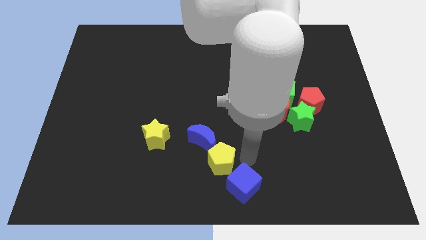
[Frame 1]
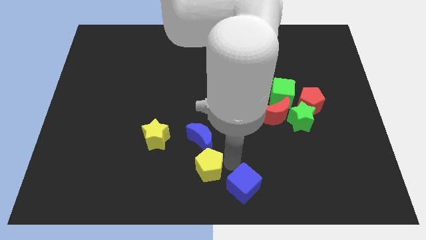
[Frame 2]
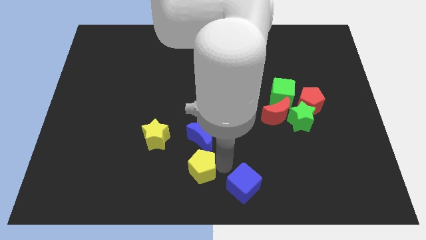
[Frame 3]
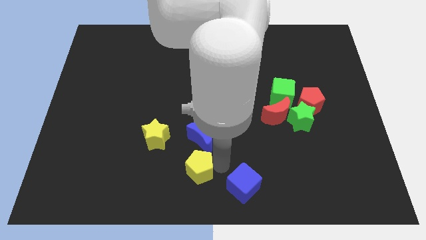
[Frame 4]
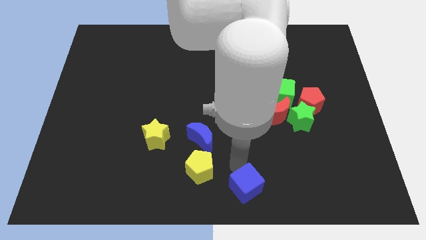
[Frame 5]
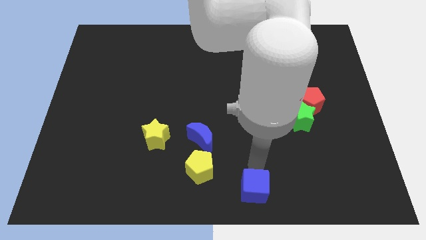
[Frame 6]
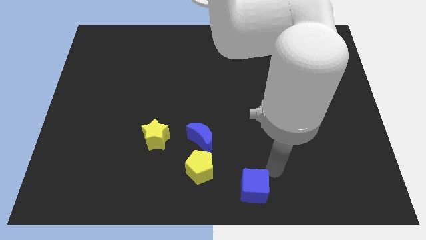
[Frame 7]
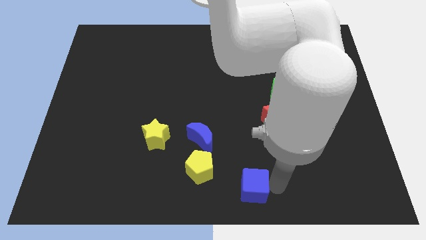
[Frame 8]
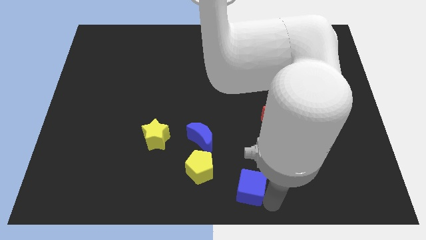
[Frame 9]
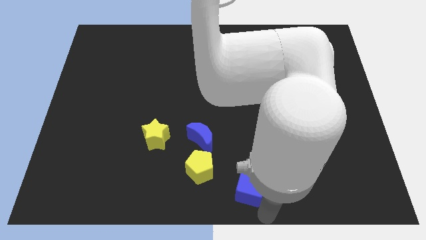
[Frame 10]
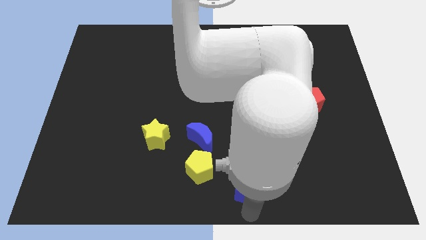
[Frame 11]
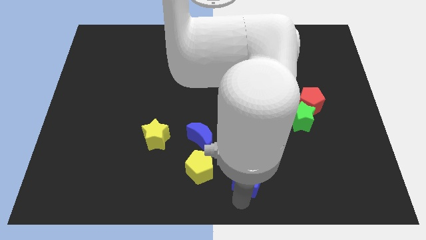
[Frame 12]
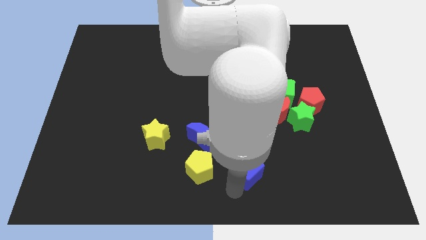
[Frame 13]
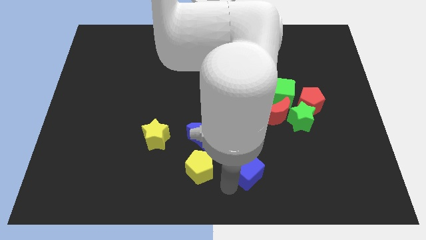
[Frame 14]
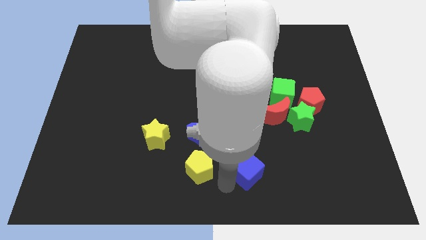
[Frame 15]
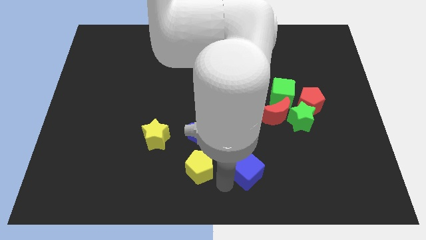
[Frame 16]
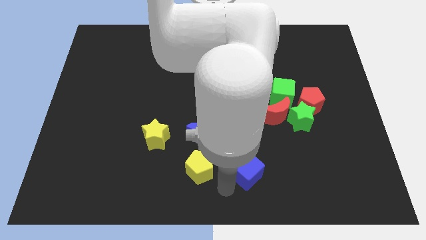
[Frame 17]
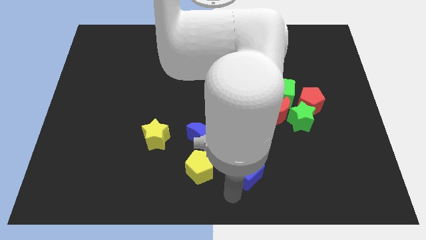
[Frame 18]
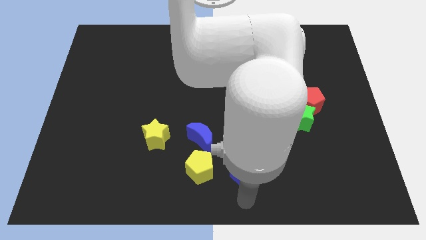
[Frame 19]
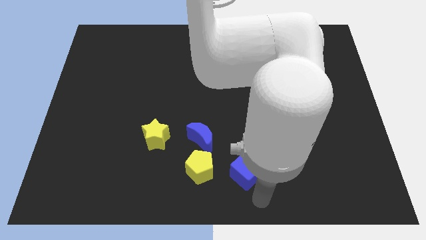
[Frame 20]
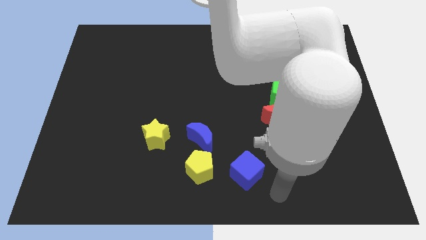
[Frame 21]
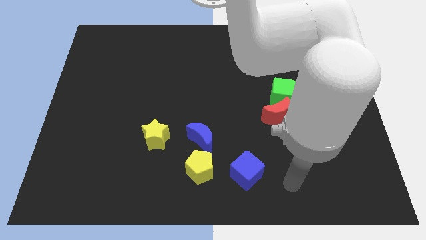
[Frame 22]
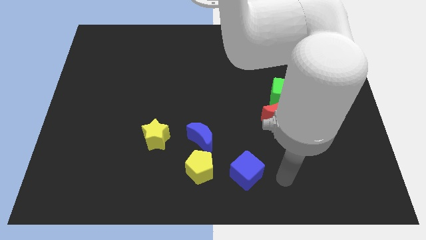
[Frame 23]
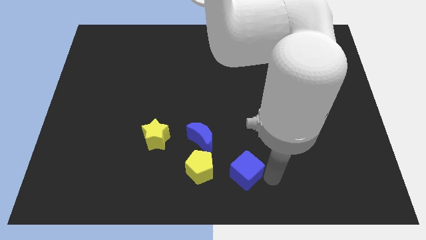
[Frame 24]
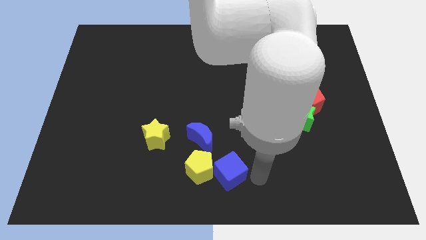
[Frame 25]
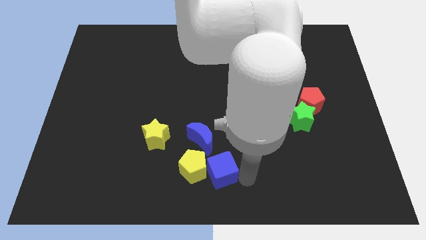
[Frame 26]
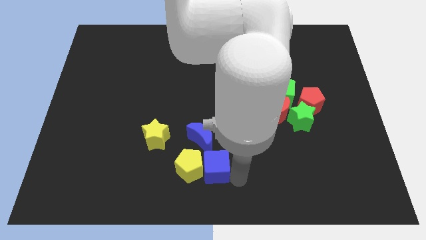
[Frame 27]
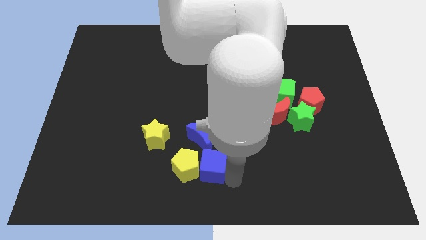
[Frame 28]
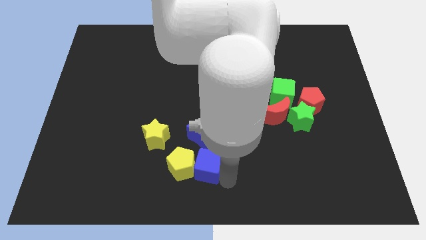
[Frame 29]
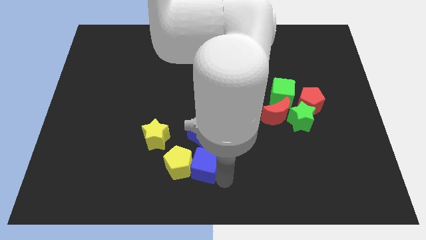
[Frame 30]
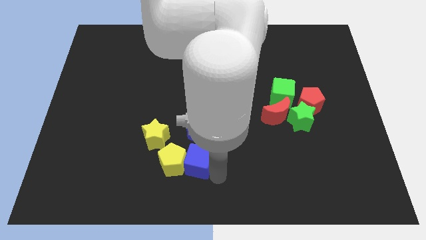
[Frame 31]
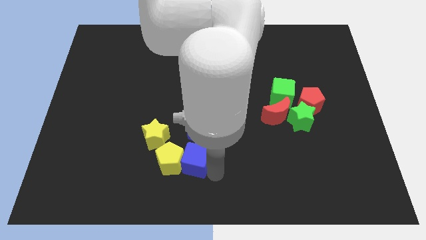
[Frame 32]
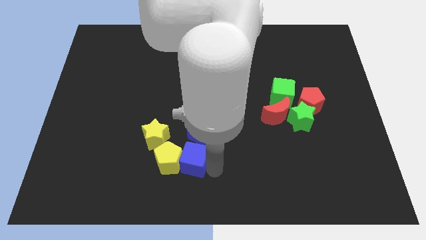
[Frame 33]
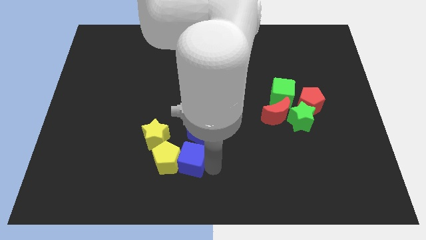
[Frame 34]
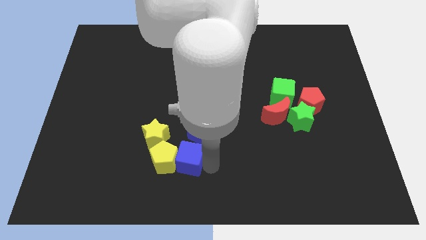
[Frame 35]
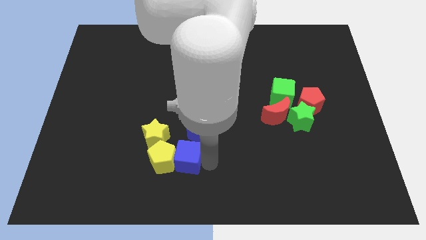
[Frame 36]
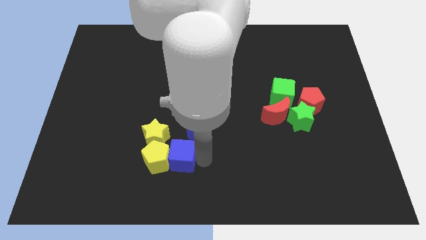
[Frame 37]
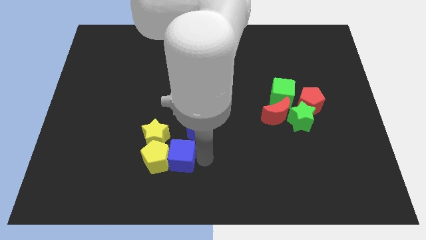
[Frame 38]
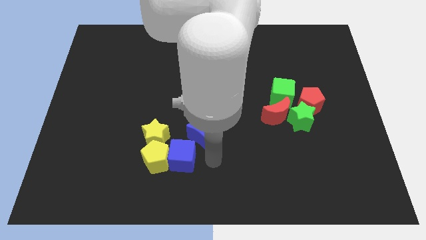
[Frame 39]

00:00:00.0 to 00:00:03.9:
move the yellow pentagon and the blue cube to the bottom of the yellow star

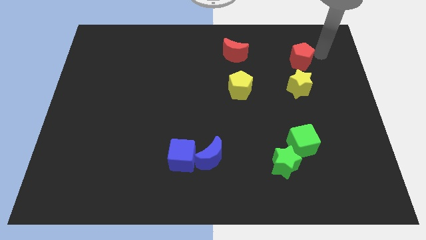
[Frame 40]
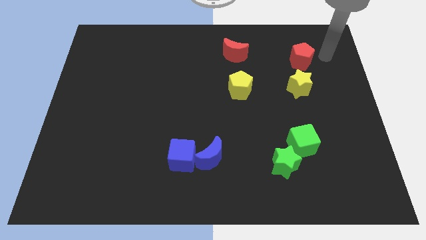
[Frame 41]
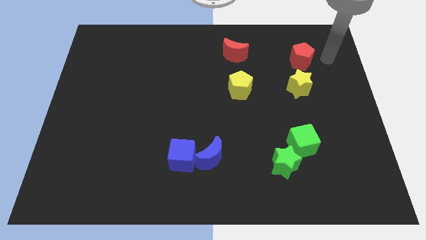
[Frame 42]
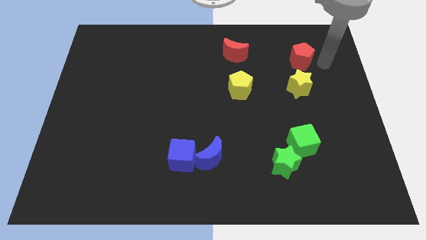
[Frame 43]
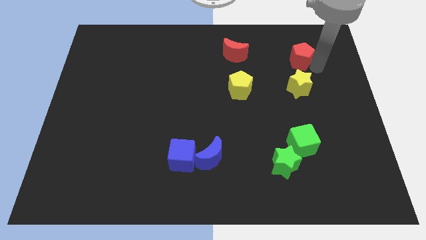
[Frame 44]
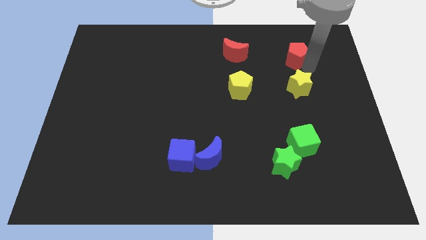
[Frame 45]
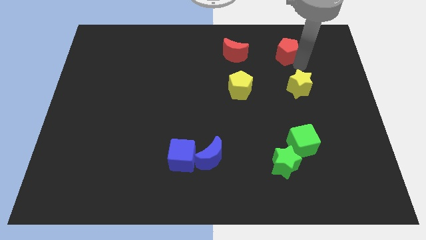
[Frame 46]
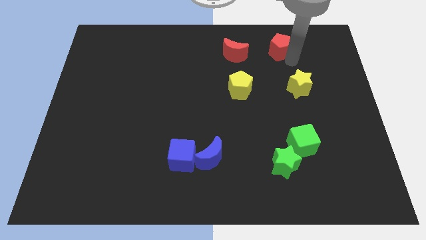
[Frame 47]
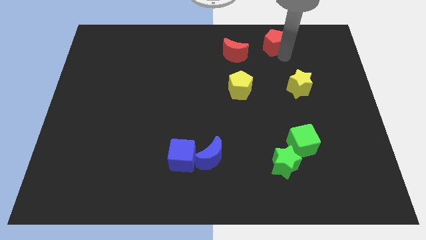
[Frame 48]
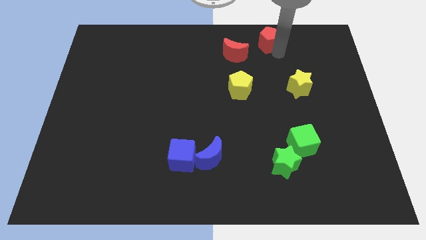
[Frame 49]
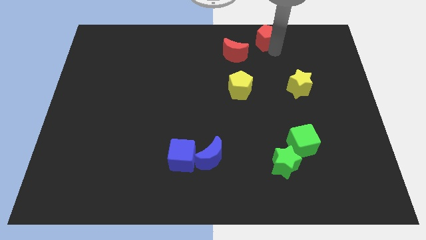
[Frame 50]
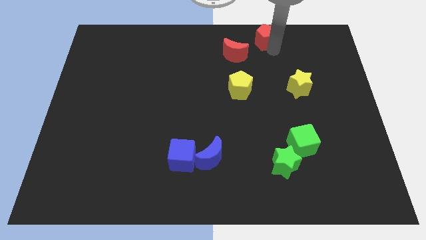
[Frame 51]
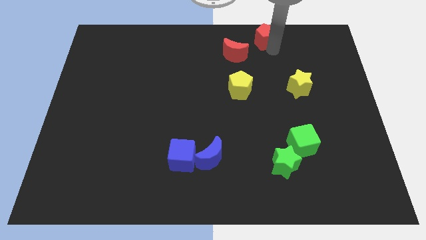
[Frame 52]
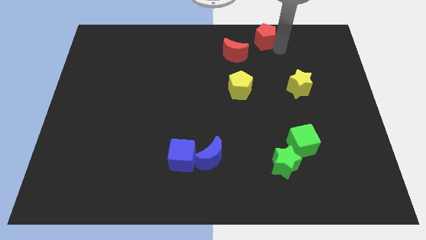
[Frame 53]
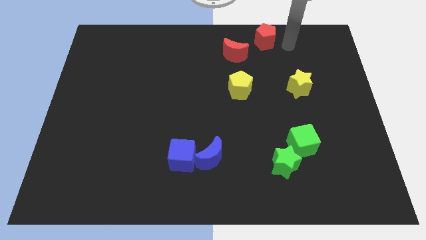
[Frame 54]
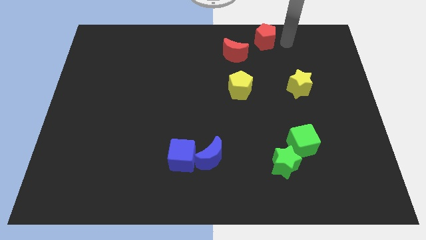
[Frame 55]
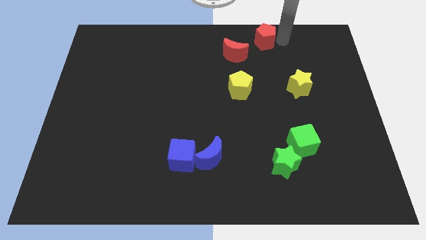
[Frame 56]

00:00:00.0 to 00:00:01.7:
move the red pentagon slightly up

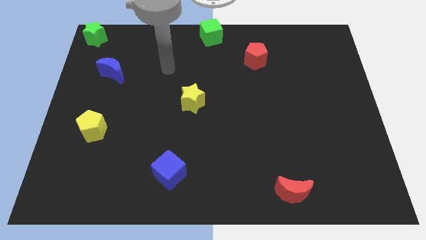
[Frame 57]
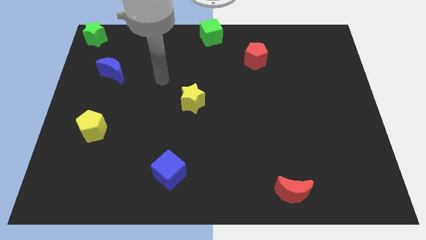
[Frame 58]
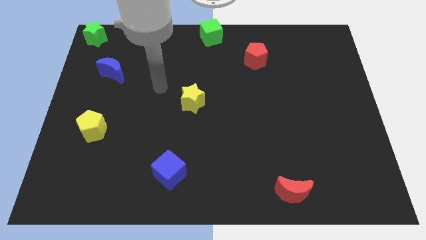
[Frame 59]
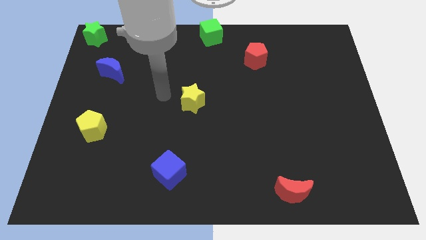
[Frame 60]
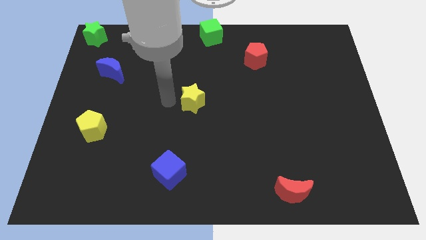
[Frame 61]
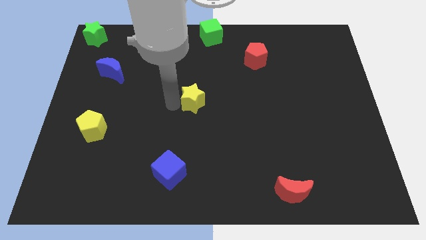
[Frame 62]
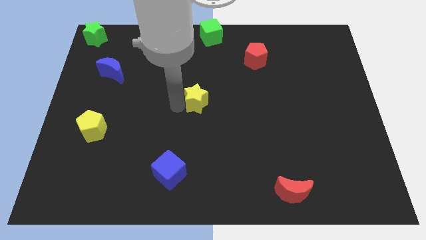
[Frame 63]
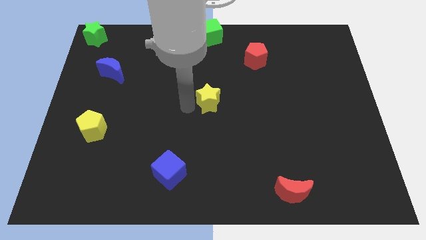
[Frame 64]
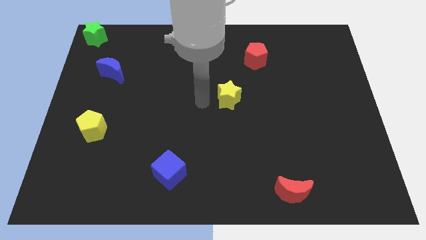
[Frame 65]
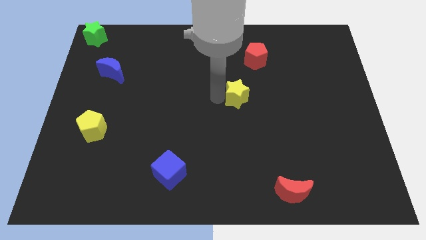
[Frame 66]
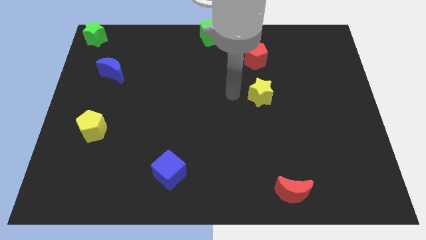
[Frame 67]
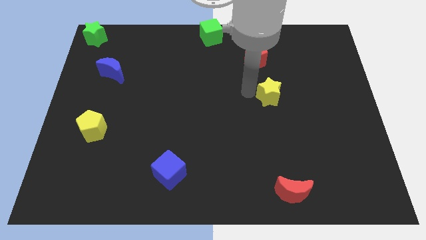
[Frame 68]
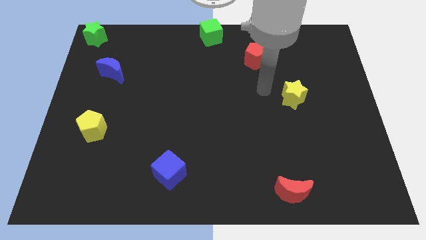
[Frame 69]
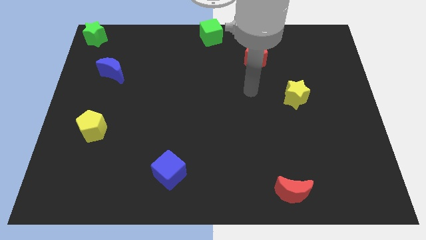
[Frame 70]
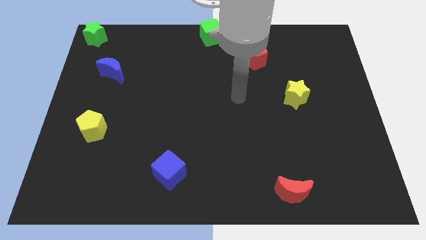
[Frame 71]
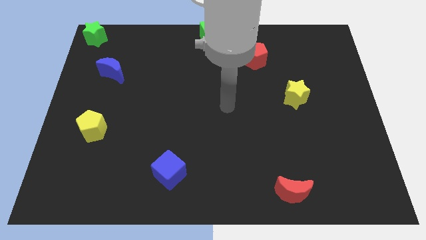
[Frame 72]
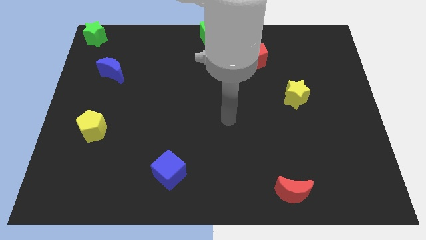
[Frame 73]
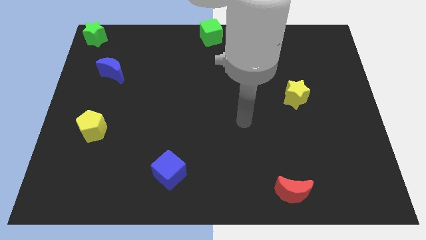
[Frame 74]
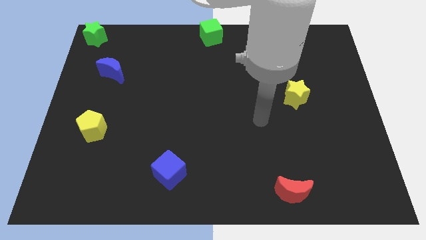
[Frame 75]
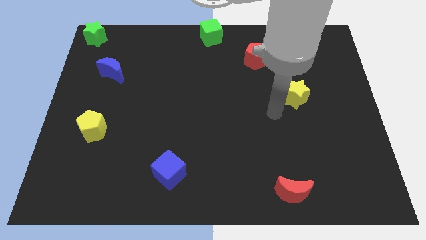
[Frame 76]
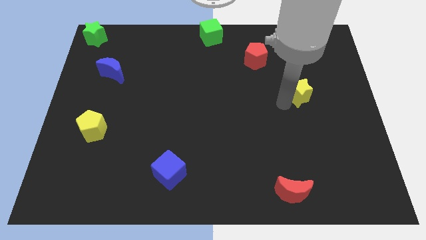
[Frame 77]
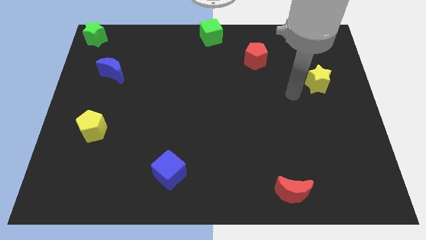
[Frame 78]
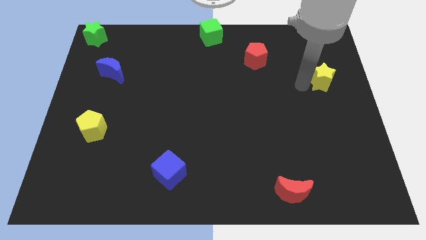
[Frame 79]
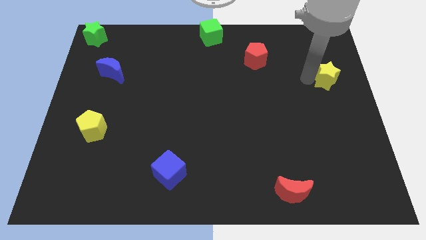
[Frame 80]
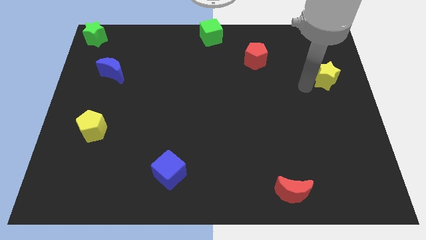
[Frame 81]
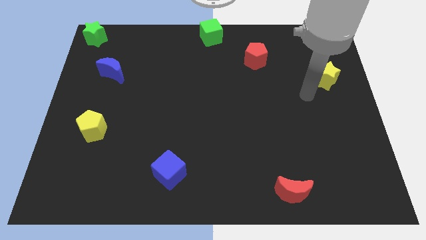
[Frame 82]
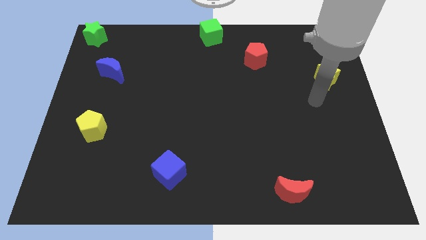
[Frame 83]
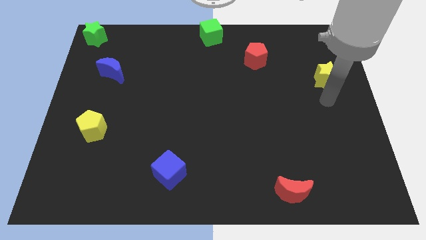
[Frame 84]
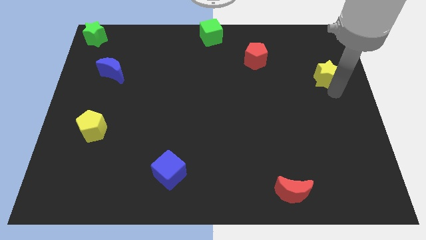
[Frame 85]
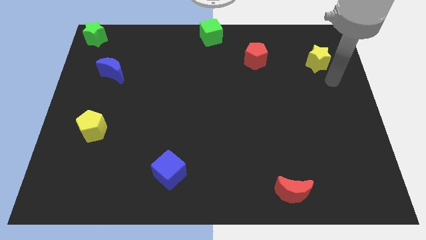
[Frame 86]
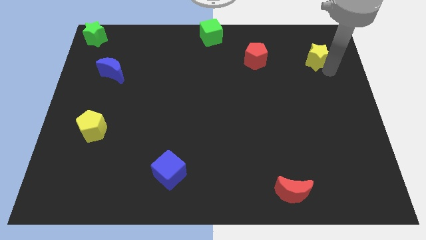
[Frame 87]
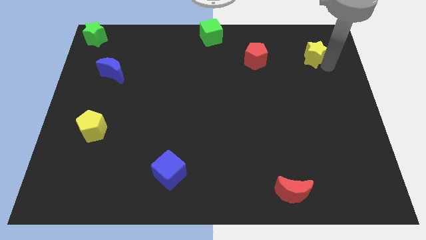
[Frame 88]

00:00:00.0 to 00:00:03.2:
push the yellow star parallel right to the red pentagon
